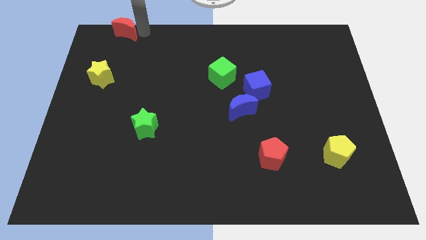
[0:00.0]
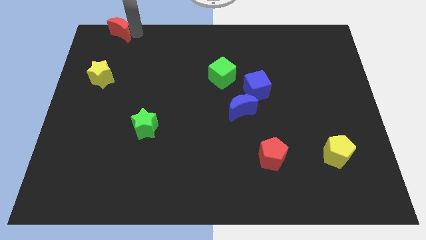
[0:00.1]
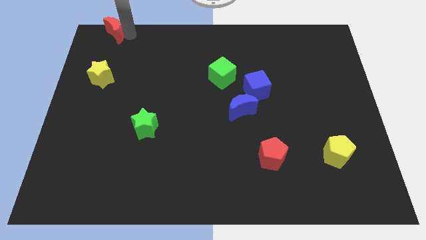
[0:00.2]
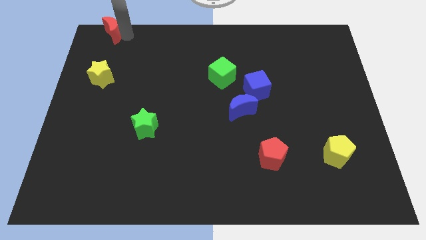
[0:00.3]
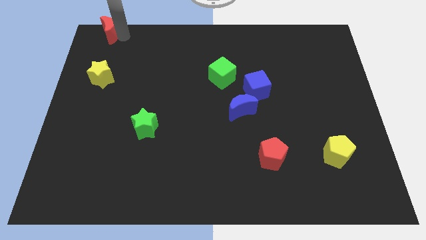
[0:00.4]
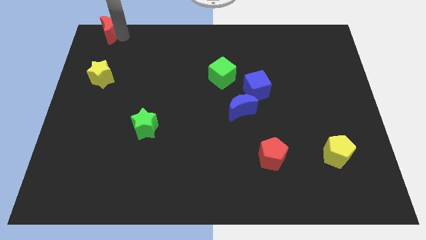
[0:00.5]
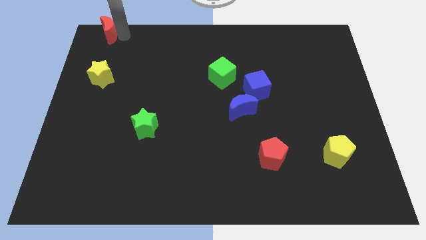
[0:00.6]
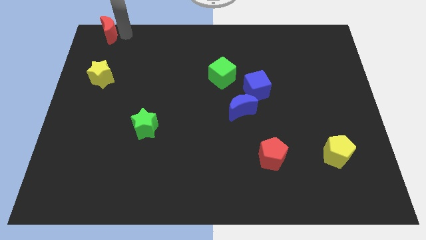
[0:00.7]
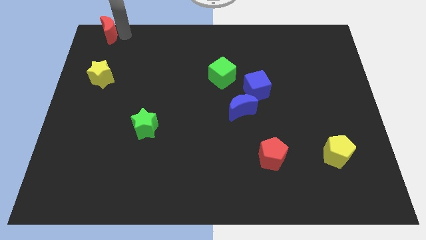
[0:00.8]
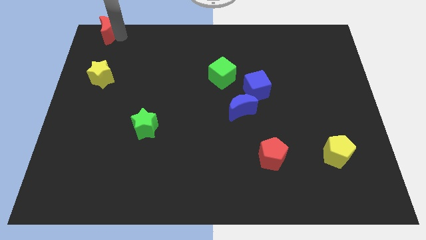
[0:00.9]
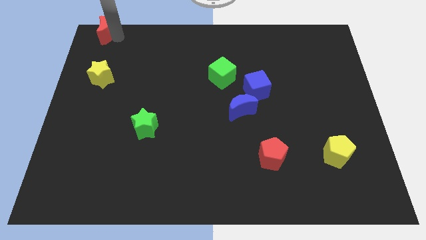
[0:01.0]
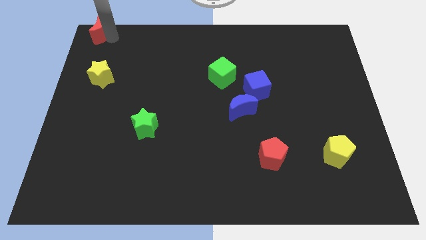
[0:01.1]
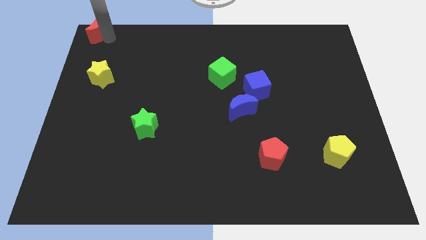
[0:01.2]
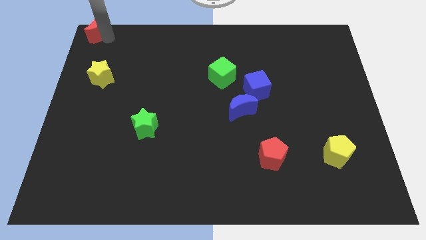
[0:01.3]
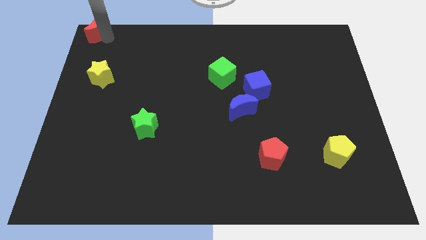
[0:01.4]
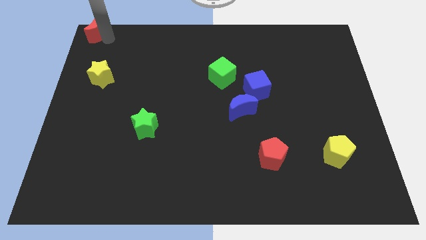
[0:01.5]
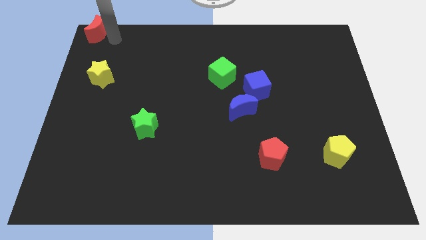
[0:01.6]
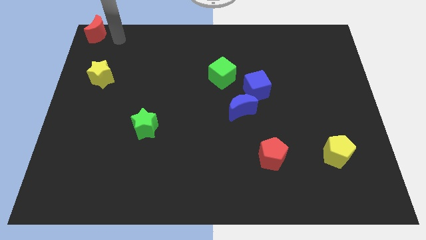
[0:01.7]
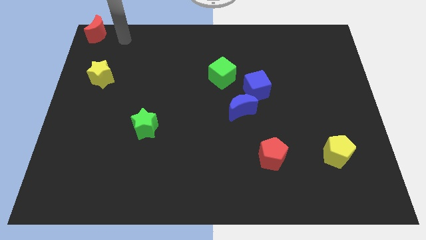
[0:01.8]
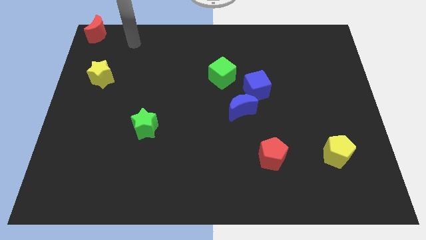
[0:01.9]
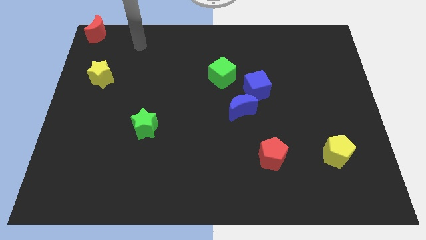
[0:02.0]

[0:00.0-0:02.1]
slide red moon to the top left

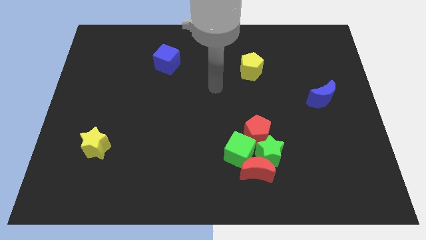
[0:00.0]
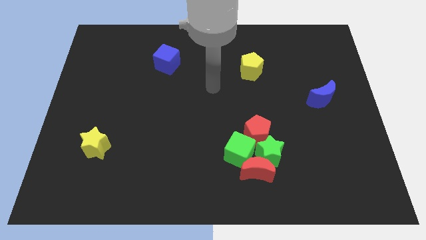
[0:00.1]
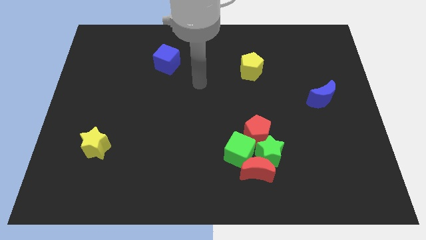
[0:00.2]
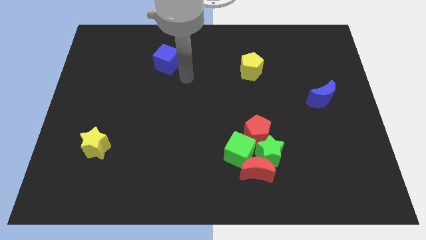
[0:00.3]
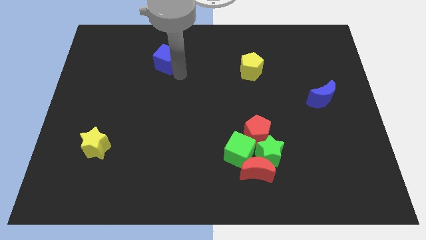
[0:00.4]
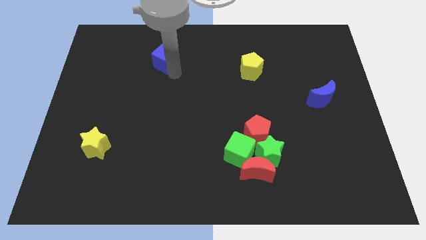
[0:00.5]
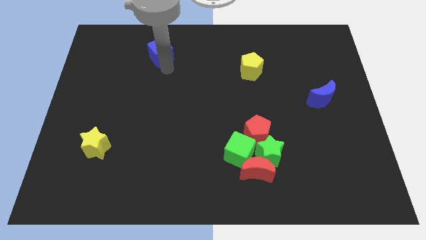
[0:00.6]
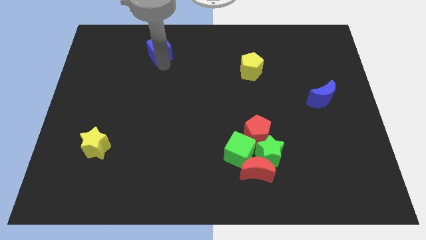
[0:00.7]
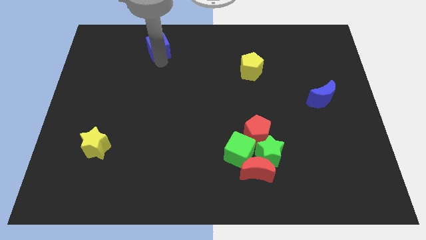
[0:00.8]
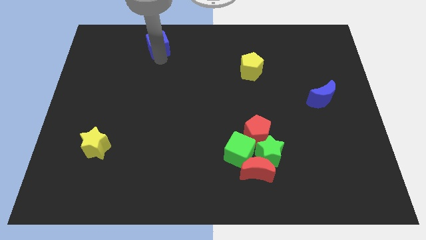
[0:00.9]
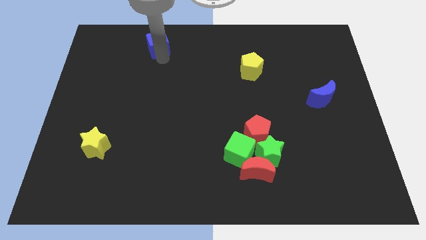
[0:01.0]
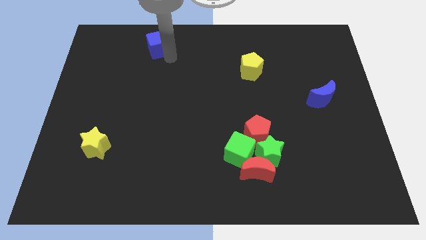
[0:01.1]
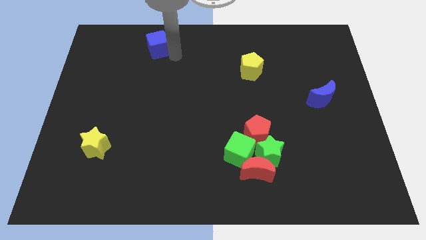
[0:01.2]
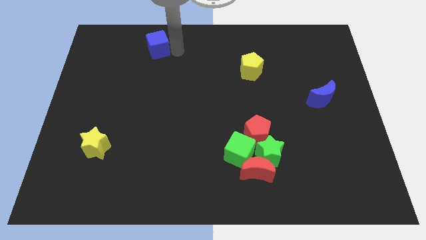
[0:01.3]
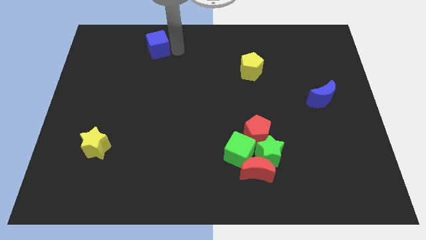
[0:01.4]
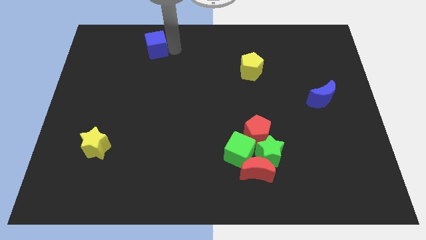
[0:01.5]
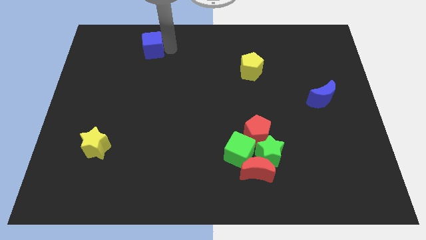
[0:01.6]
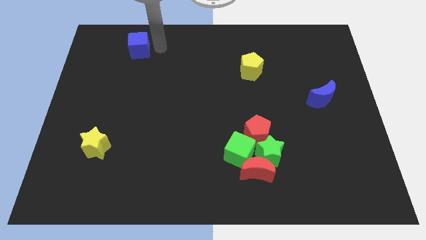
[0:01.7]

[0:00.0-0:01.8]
slightly move the blue cube up

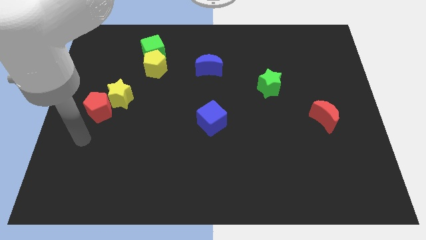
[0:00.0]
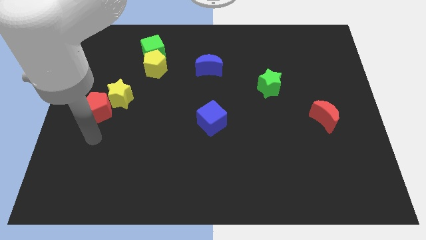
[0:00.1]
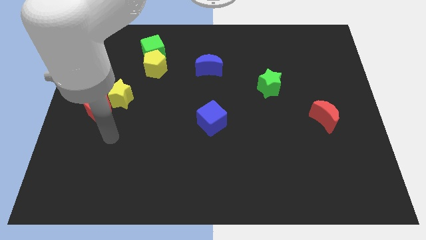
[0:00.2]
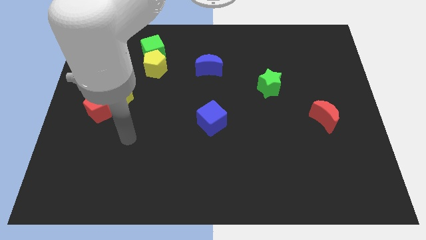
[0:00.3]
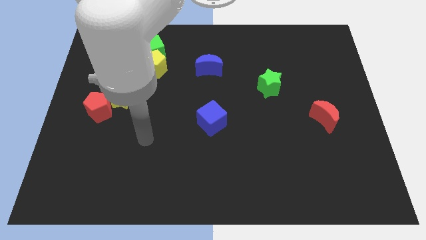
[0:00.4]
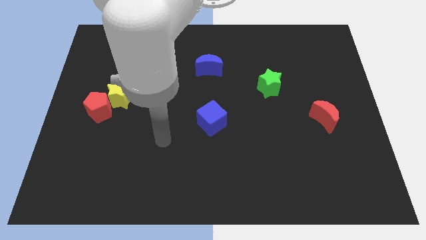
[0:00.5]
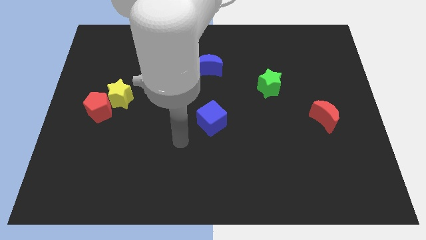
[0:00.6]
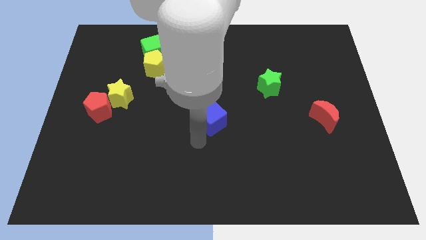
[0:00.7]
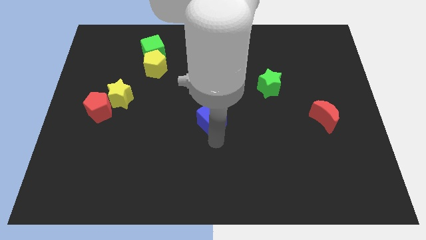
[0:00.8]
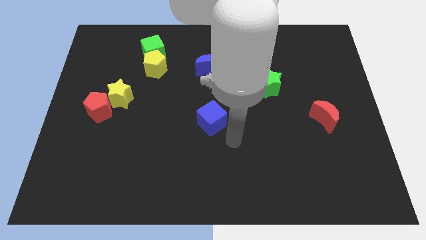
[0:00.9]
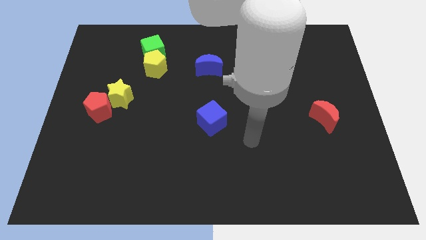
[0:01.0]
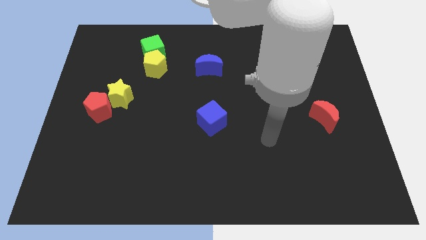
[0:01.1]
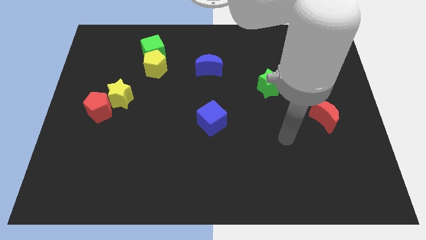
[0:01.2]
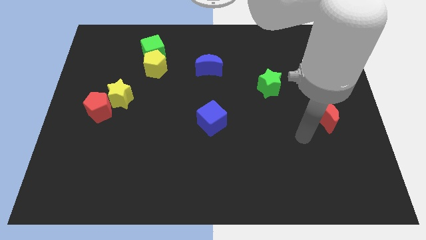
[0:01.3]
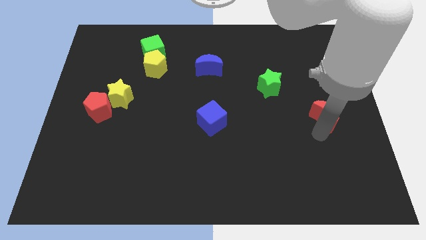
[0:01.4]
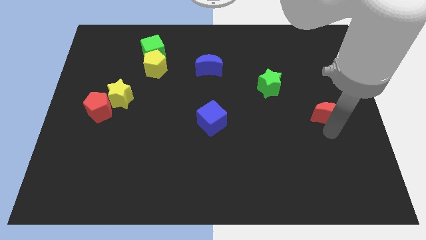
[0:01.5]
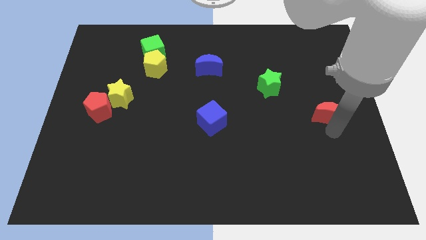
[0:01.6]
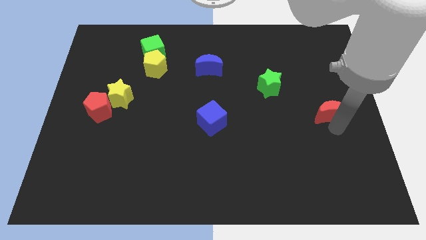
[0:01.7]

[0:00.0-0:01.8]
touch the bottom side of the red moon

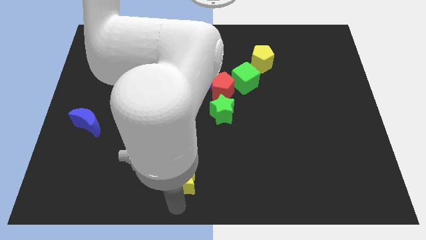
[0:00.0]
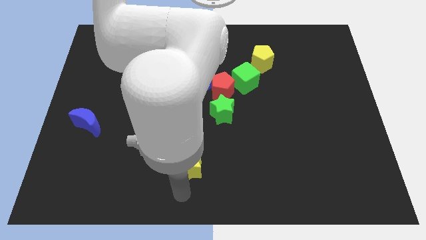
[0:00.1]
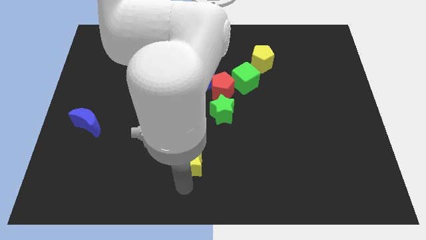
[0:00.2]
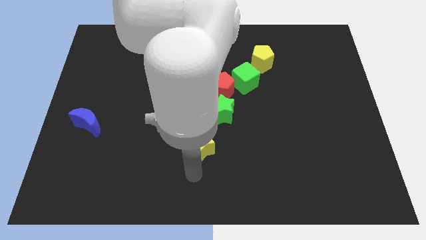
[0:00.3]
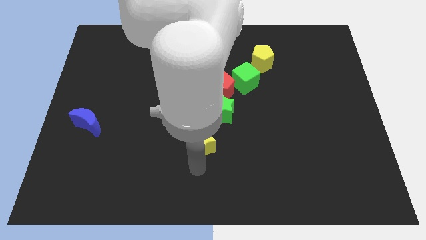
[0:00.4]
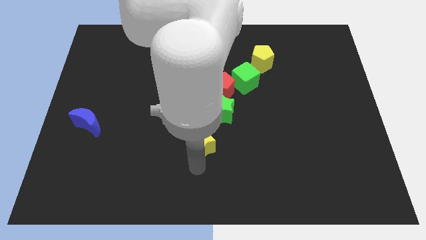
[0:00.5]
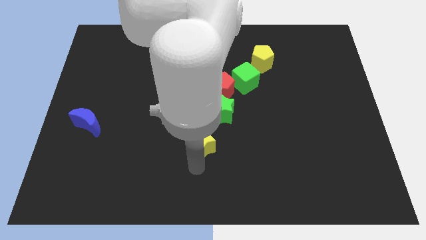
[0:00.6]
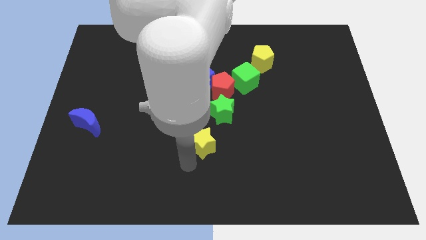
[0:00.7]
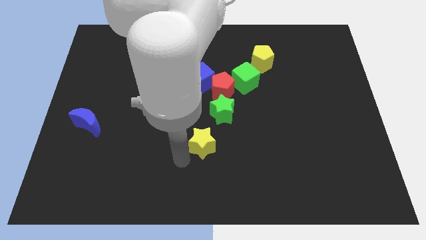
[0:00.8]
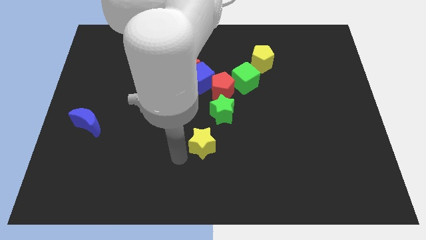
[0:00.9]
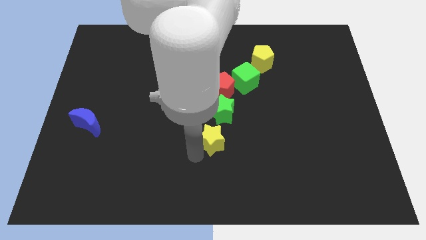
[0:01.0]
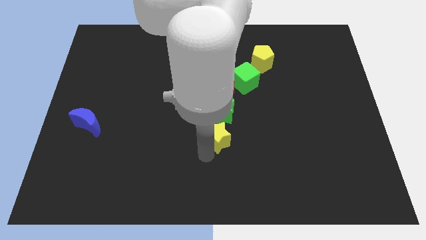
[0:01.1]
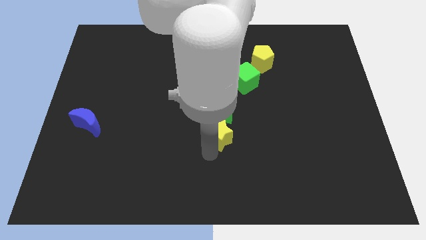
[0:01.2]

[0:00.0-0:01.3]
move yellow star below green star

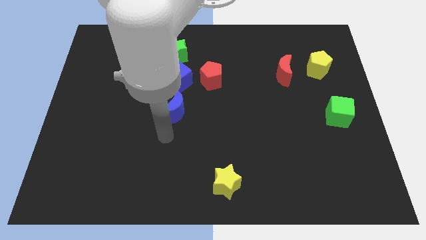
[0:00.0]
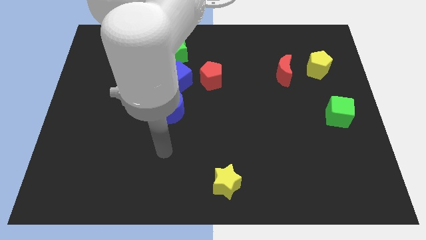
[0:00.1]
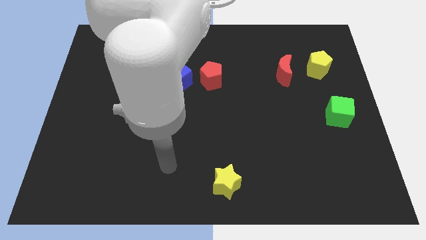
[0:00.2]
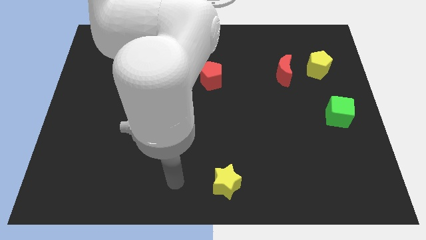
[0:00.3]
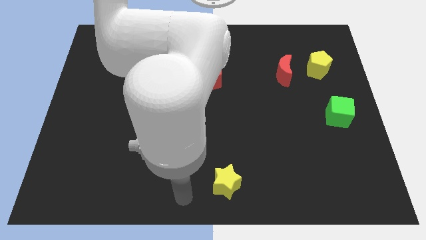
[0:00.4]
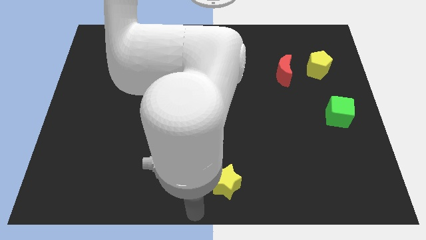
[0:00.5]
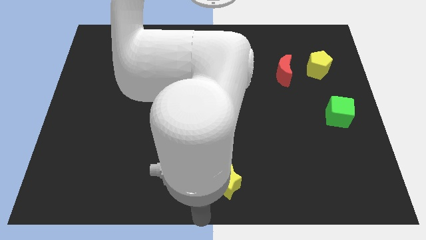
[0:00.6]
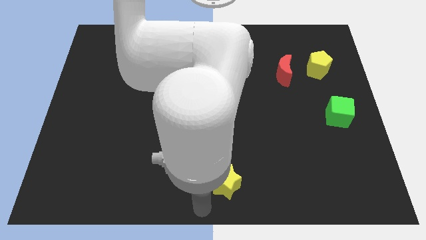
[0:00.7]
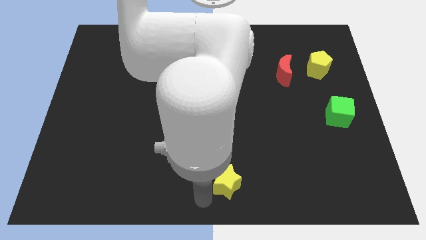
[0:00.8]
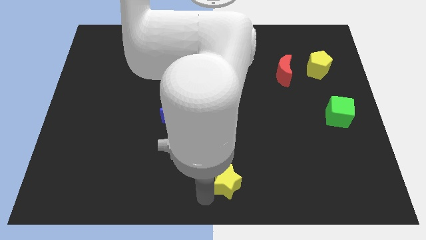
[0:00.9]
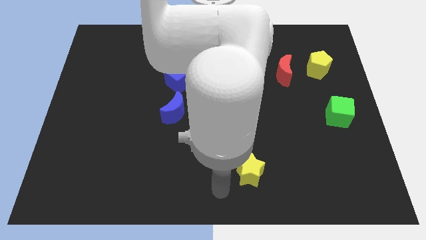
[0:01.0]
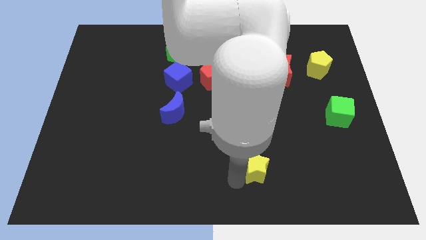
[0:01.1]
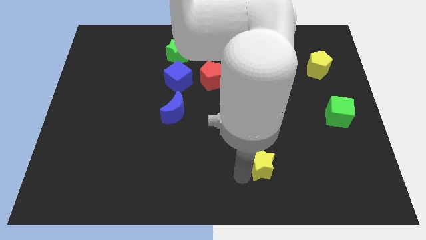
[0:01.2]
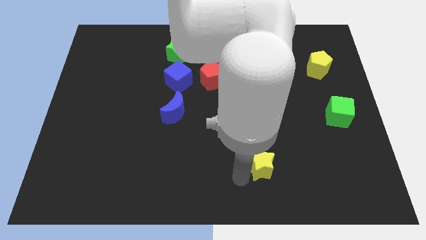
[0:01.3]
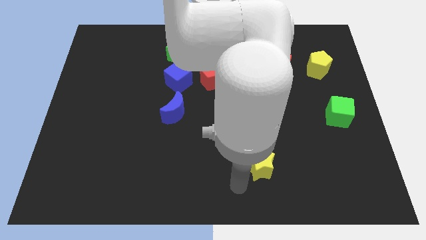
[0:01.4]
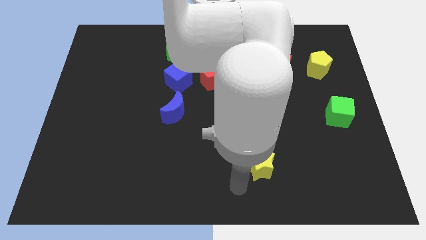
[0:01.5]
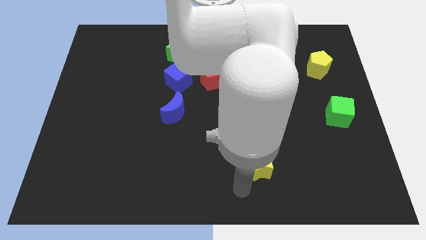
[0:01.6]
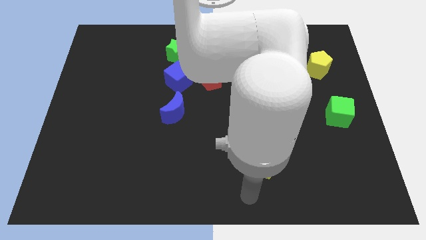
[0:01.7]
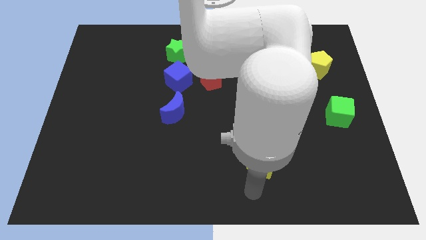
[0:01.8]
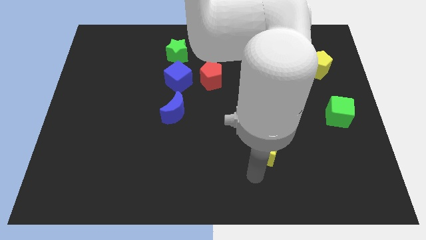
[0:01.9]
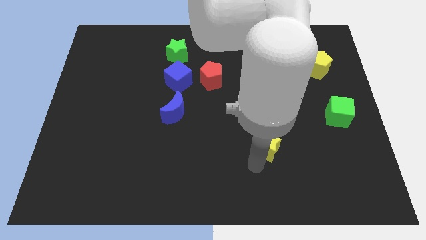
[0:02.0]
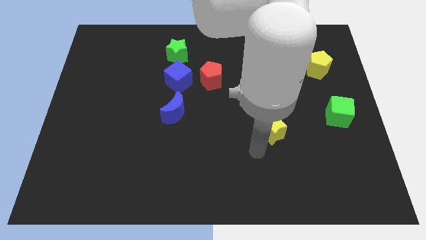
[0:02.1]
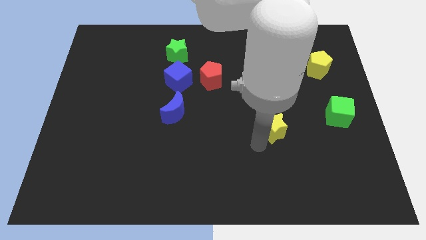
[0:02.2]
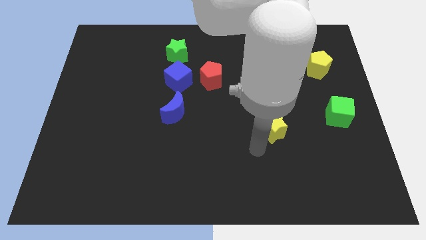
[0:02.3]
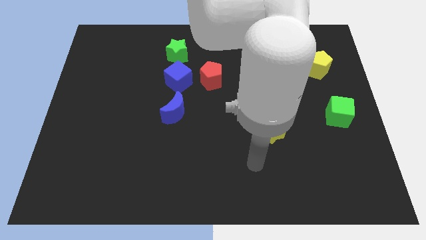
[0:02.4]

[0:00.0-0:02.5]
drag the yellow star towards up
